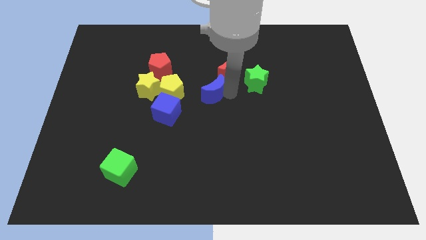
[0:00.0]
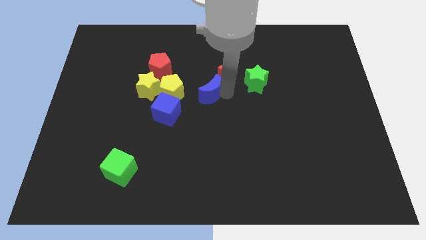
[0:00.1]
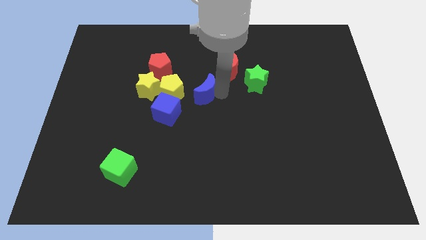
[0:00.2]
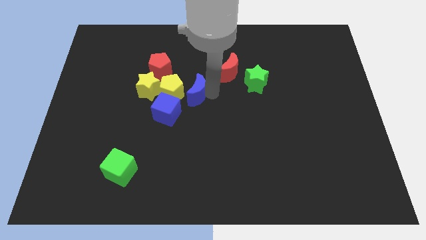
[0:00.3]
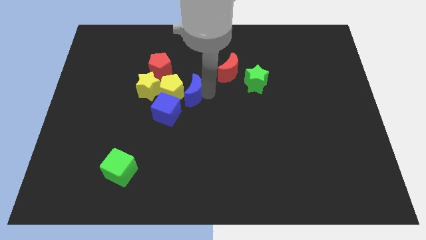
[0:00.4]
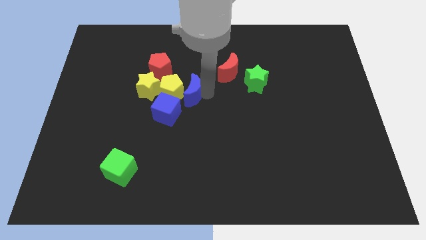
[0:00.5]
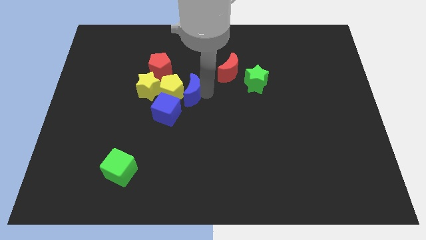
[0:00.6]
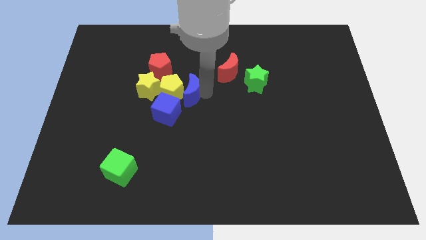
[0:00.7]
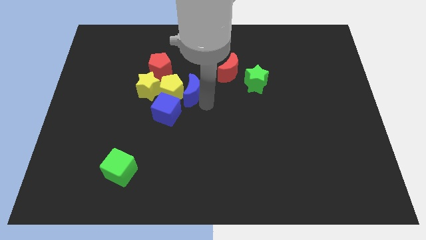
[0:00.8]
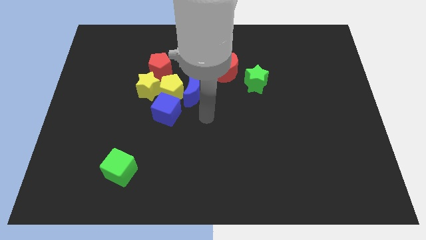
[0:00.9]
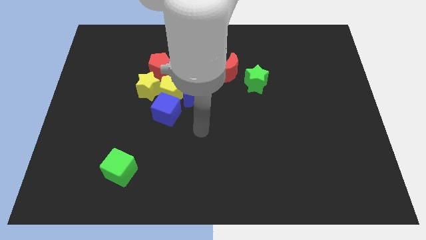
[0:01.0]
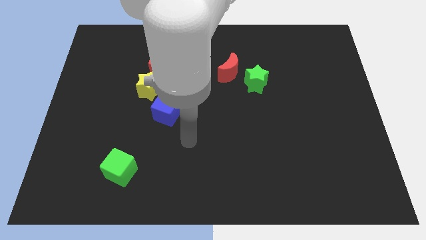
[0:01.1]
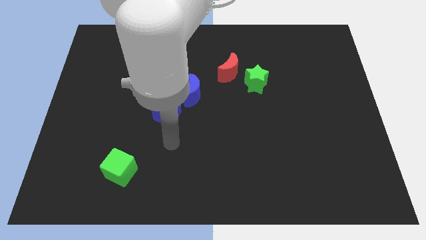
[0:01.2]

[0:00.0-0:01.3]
push the blue crescent to the right side of the yellow pentagon

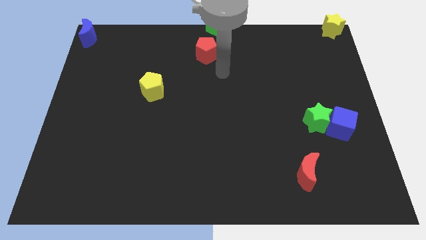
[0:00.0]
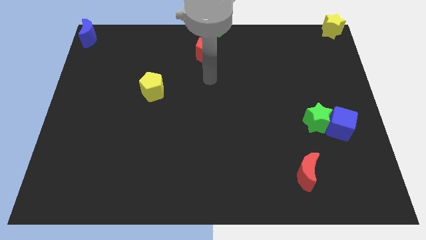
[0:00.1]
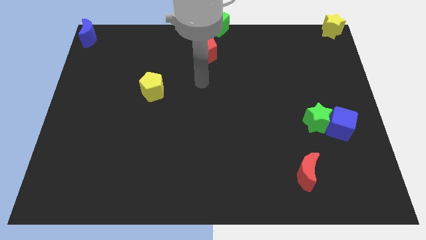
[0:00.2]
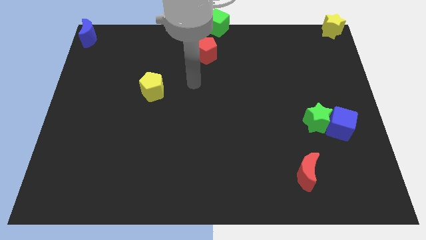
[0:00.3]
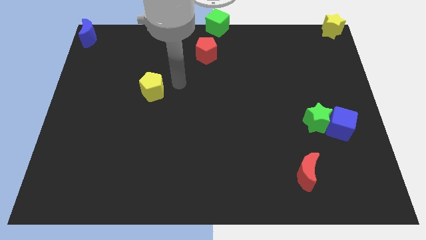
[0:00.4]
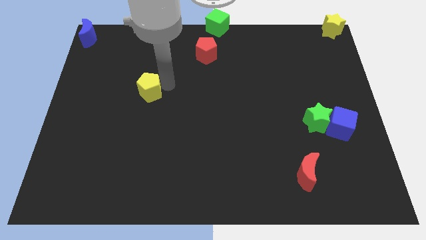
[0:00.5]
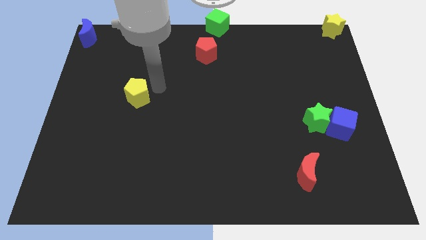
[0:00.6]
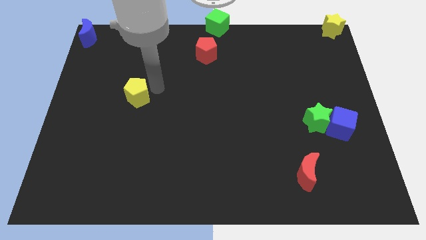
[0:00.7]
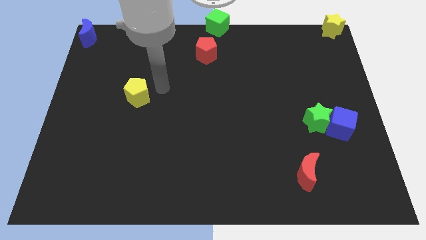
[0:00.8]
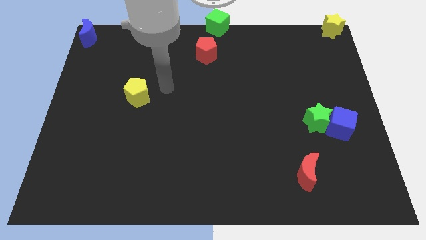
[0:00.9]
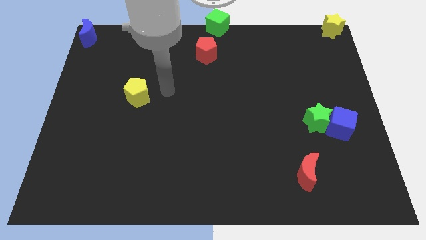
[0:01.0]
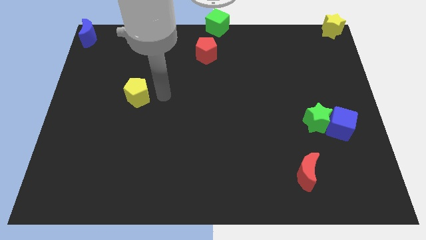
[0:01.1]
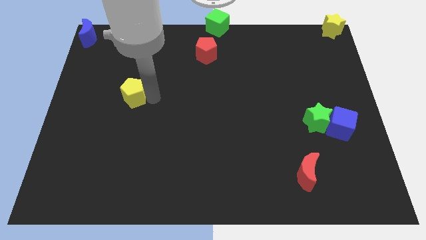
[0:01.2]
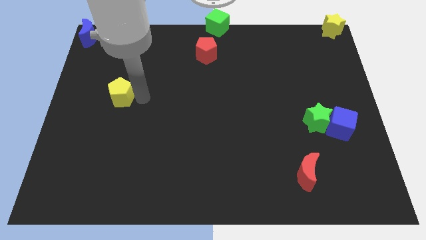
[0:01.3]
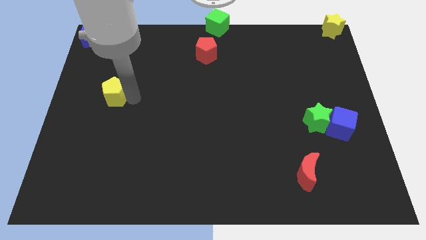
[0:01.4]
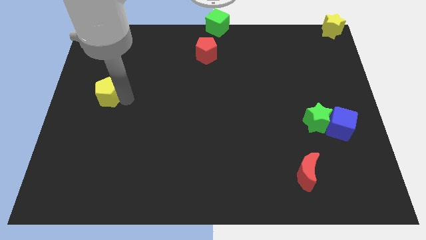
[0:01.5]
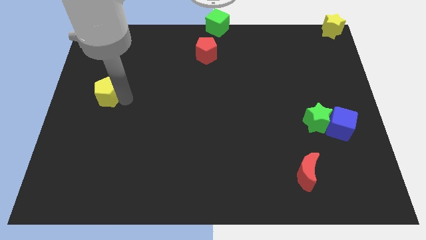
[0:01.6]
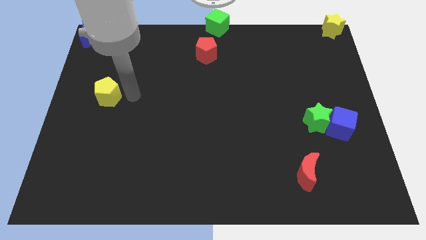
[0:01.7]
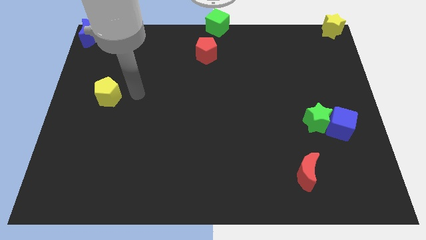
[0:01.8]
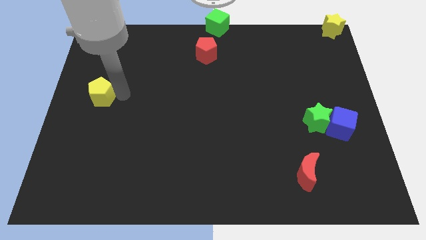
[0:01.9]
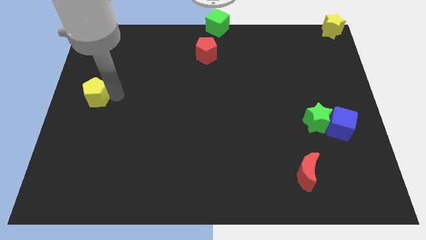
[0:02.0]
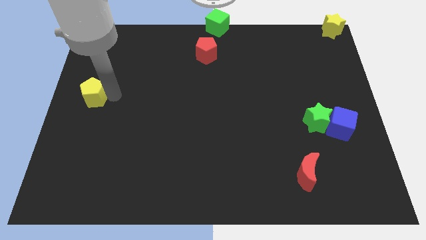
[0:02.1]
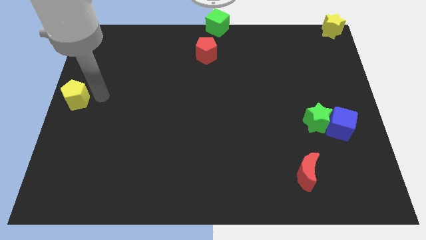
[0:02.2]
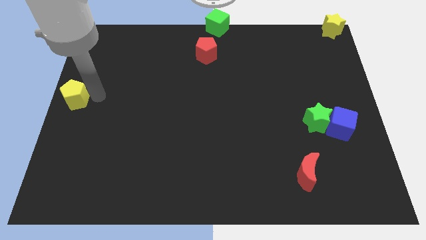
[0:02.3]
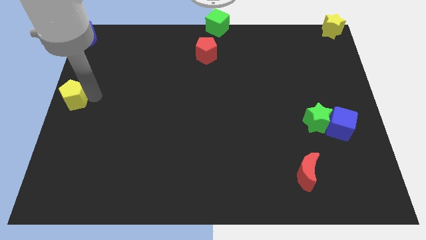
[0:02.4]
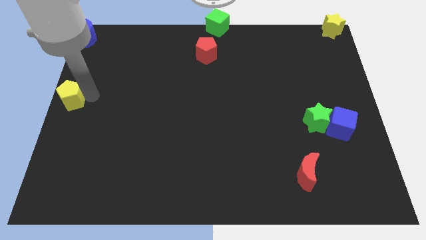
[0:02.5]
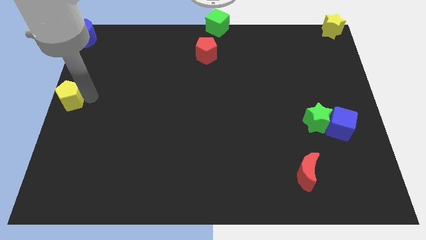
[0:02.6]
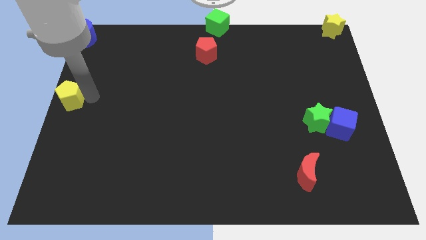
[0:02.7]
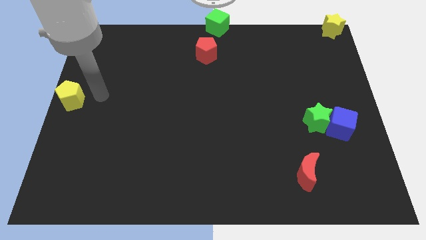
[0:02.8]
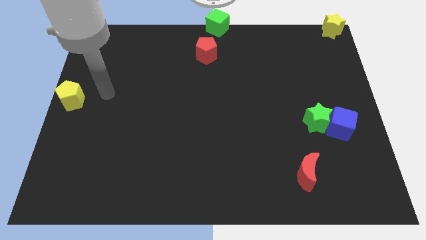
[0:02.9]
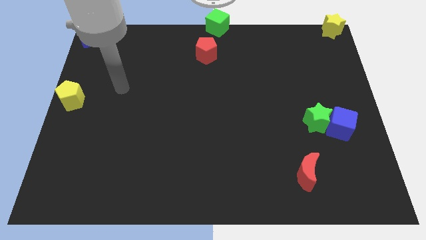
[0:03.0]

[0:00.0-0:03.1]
place the yellow pentagon to the left center of the board

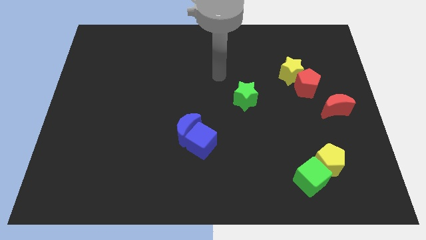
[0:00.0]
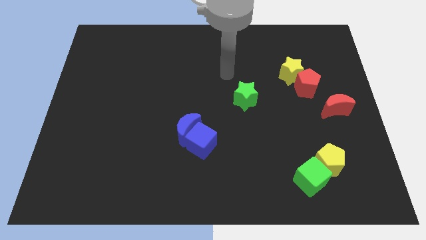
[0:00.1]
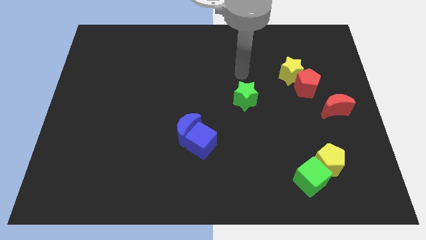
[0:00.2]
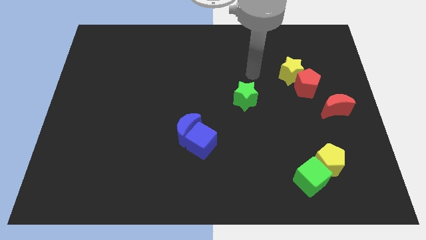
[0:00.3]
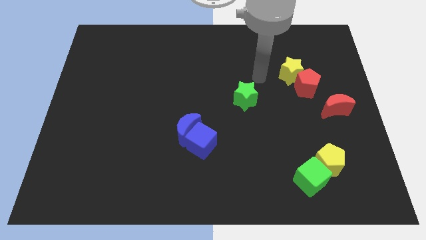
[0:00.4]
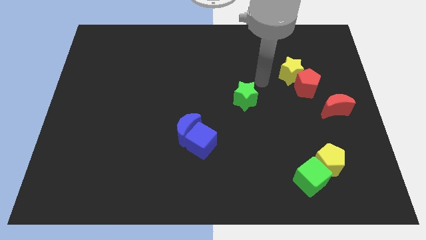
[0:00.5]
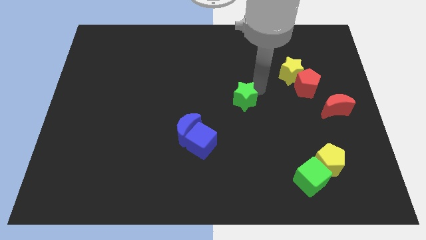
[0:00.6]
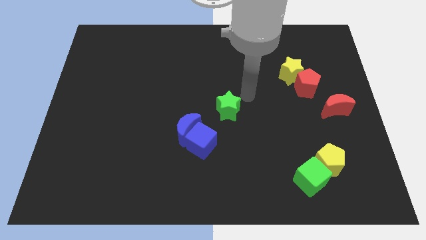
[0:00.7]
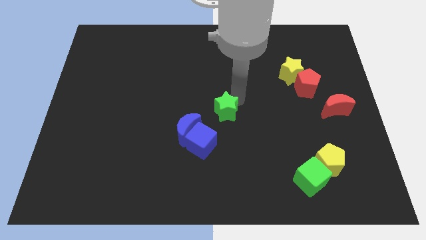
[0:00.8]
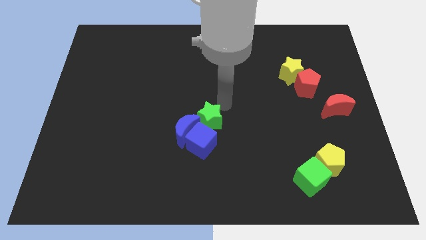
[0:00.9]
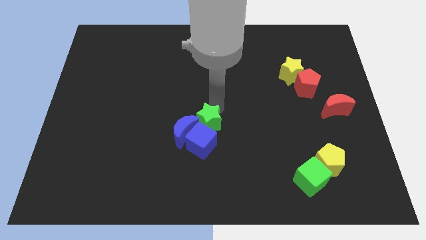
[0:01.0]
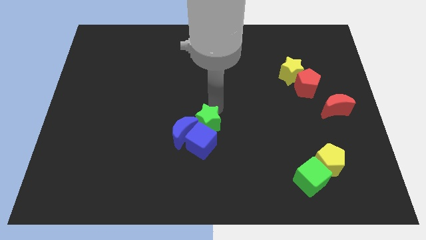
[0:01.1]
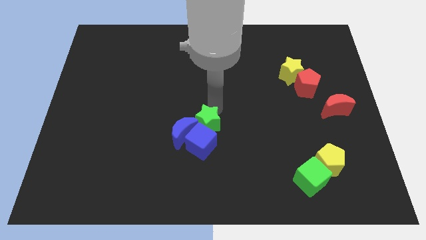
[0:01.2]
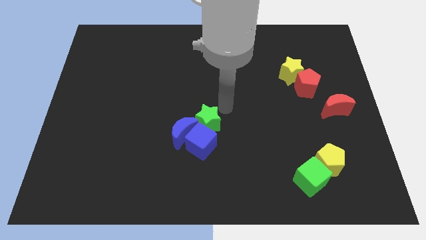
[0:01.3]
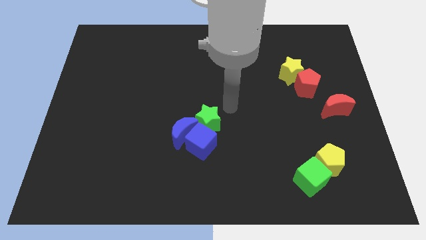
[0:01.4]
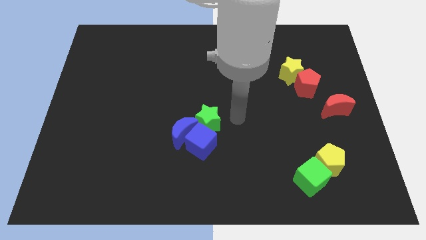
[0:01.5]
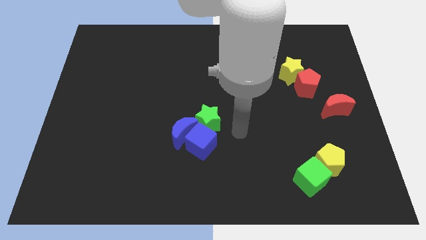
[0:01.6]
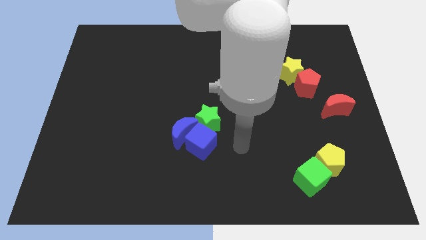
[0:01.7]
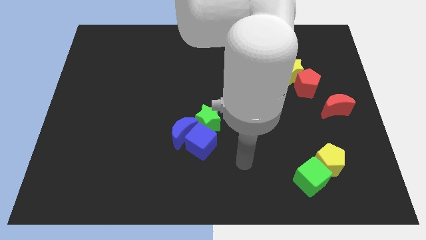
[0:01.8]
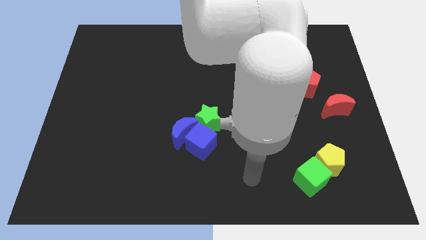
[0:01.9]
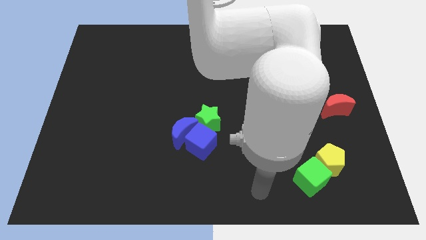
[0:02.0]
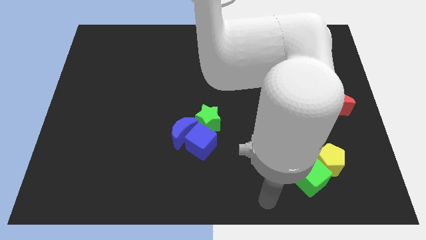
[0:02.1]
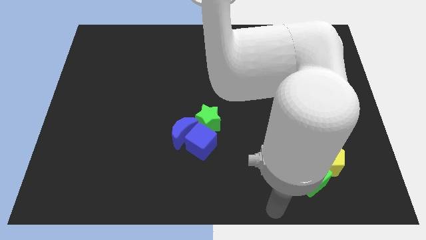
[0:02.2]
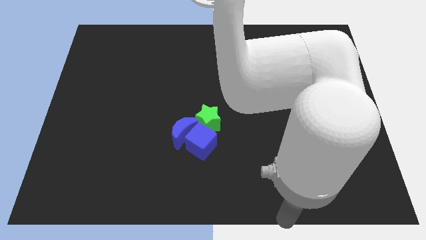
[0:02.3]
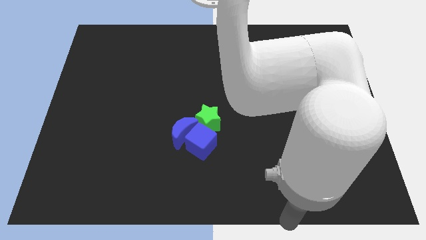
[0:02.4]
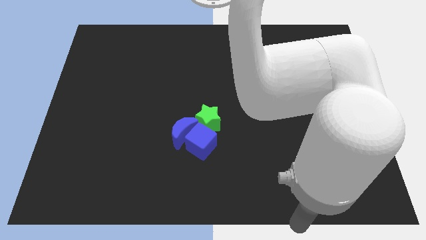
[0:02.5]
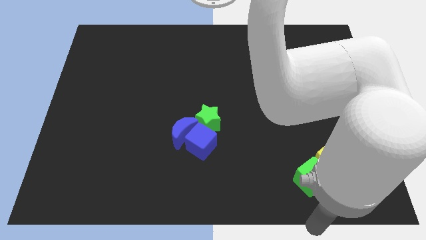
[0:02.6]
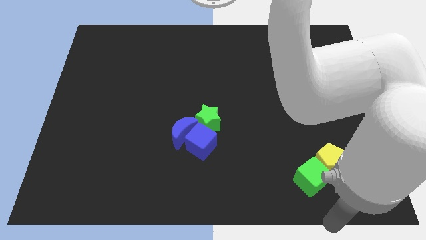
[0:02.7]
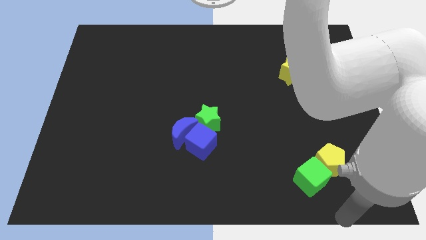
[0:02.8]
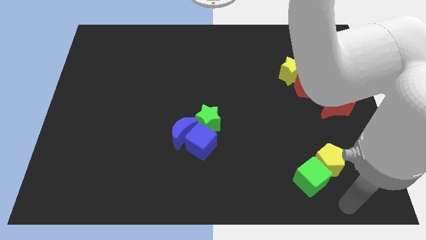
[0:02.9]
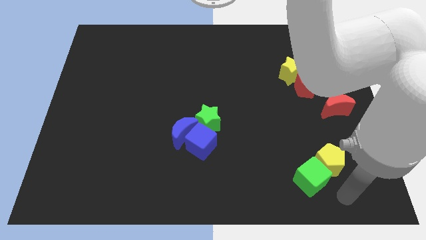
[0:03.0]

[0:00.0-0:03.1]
push green star into blue blocks

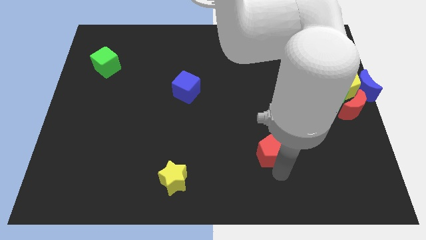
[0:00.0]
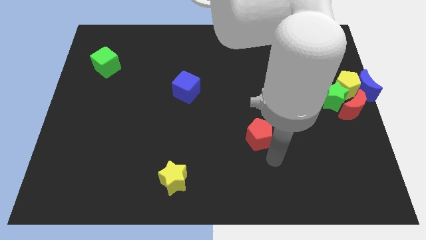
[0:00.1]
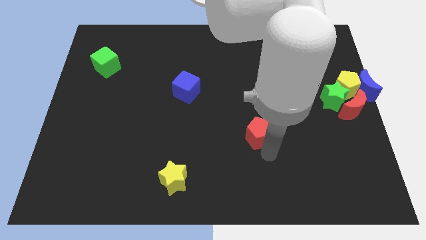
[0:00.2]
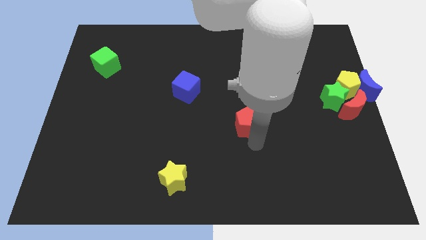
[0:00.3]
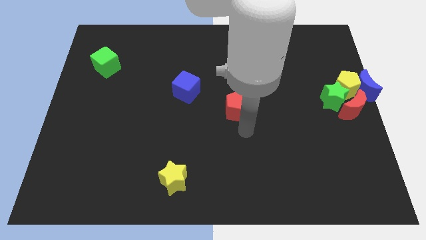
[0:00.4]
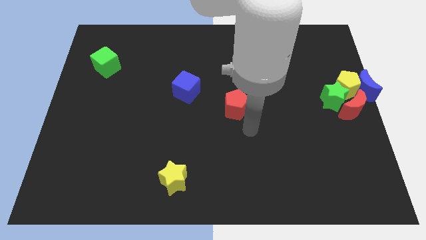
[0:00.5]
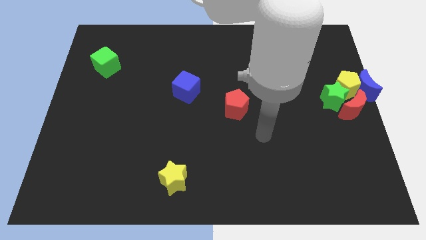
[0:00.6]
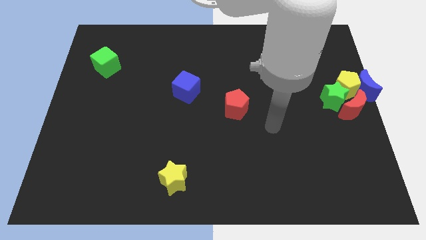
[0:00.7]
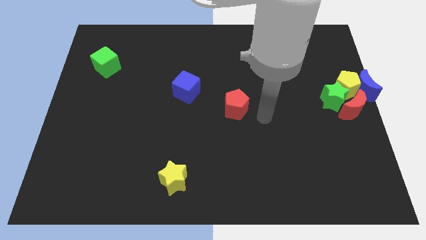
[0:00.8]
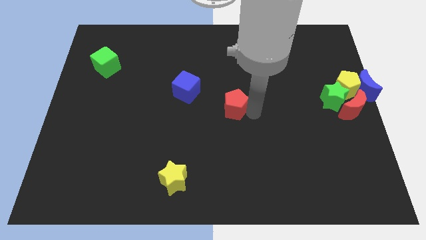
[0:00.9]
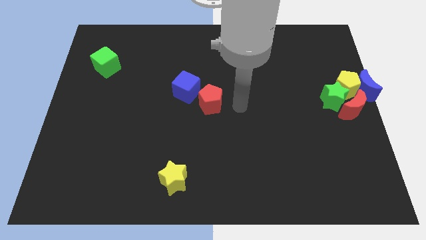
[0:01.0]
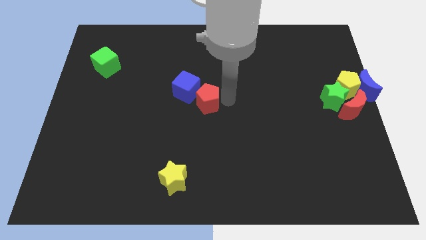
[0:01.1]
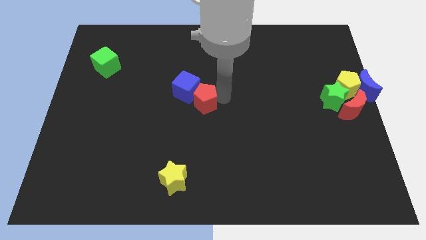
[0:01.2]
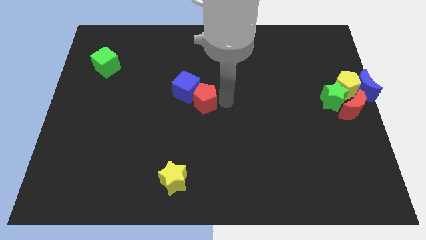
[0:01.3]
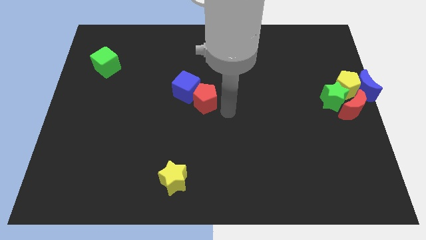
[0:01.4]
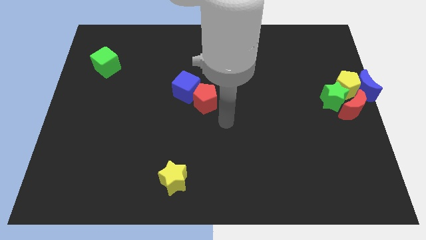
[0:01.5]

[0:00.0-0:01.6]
push the red pentagon to the right side of the blue cube
